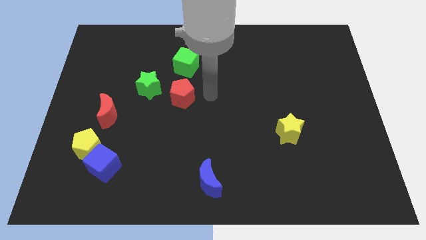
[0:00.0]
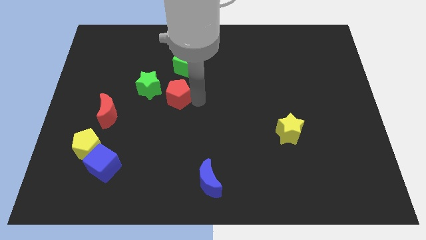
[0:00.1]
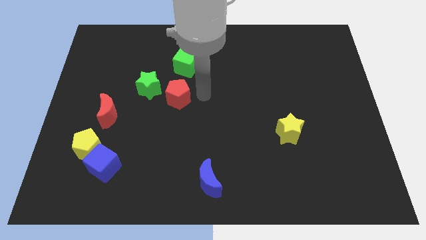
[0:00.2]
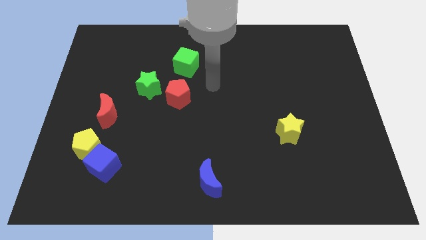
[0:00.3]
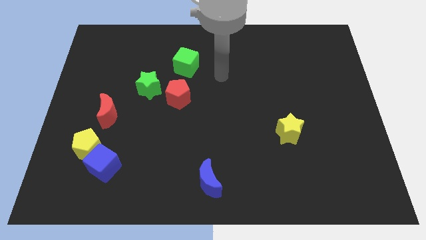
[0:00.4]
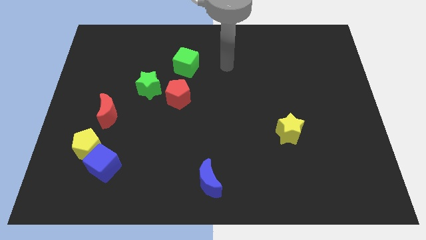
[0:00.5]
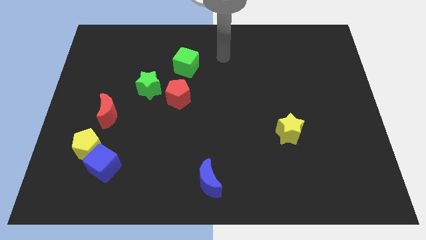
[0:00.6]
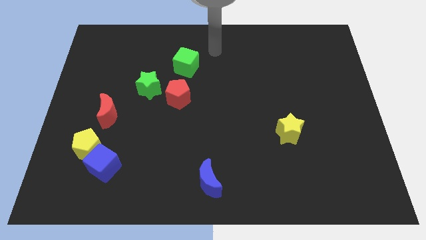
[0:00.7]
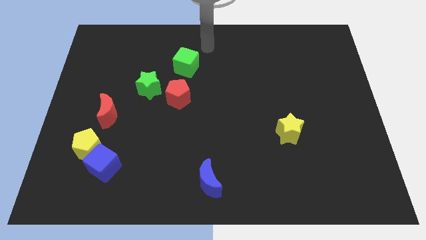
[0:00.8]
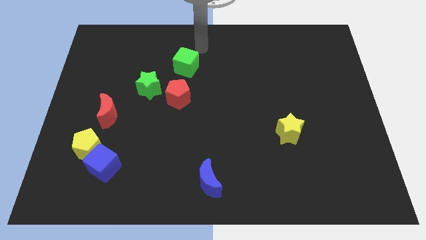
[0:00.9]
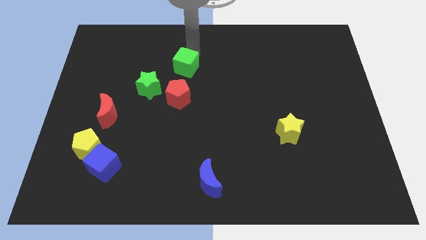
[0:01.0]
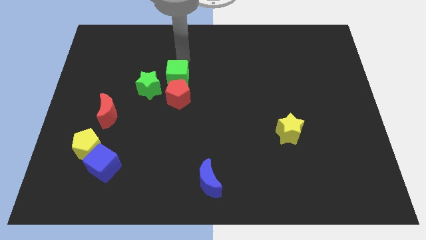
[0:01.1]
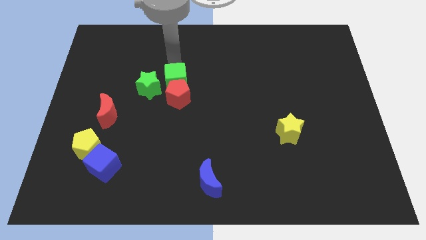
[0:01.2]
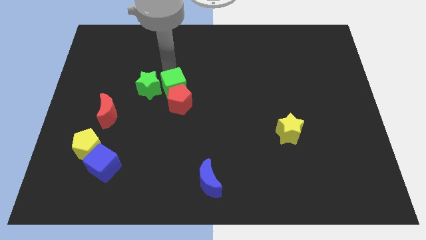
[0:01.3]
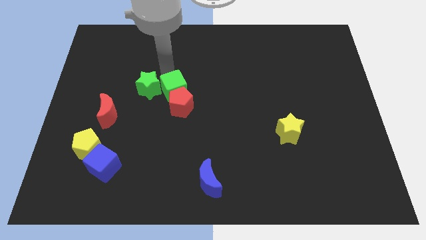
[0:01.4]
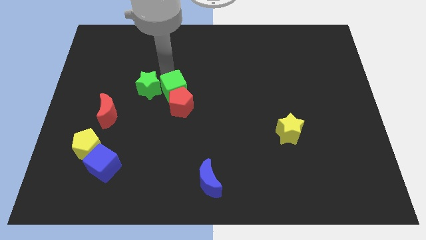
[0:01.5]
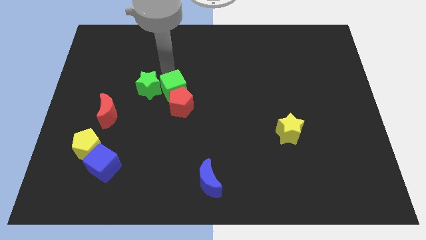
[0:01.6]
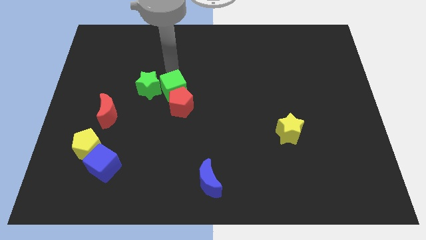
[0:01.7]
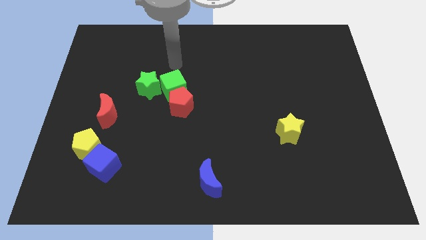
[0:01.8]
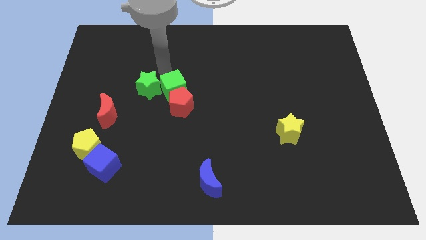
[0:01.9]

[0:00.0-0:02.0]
push the green cube into red pentagon

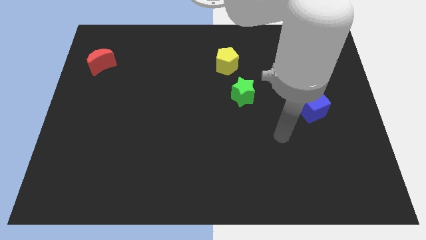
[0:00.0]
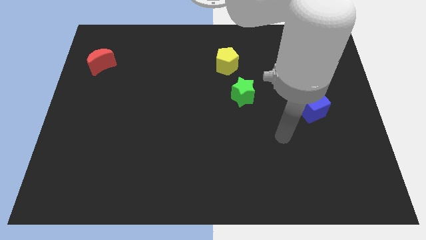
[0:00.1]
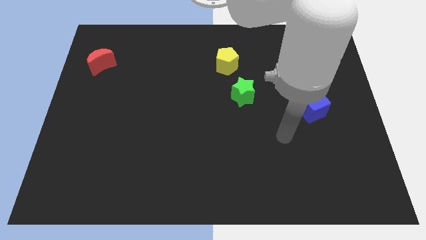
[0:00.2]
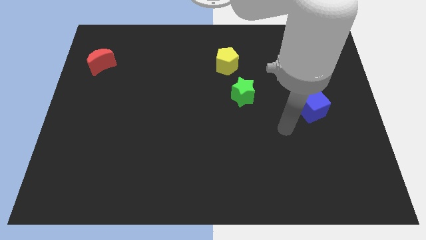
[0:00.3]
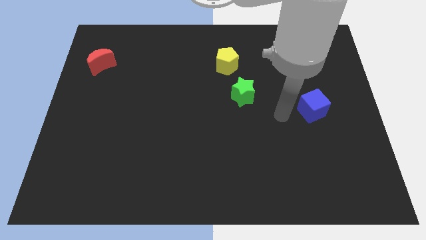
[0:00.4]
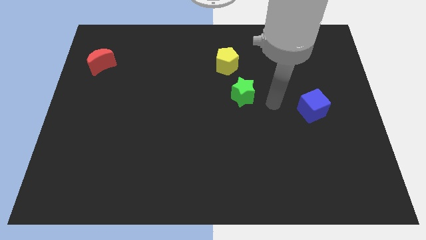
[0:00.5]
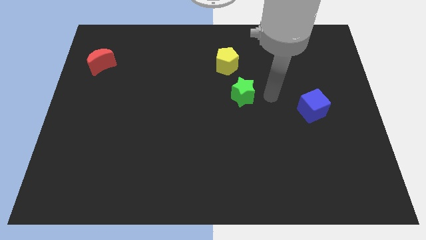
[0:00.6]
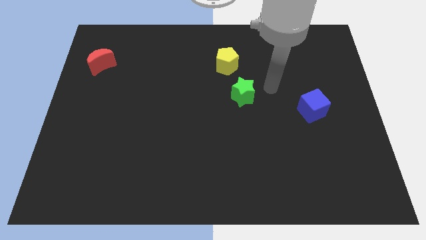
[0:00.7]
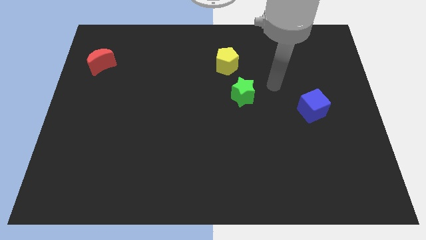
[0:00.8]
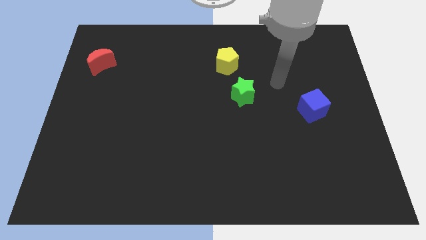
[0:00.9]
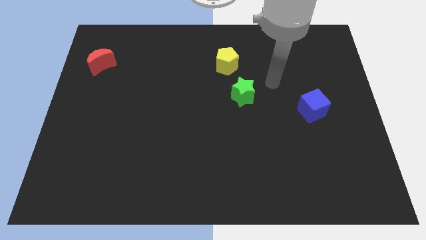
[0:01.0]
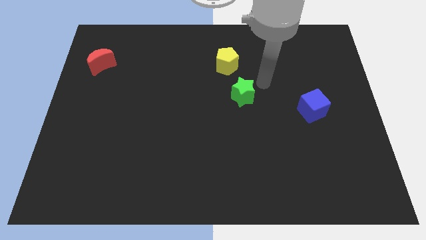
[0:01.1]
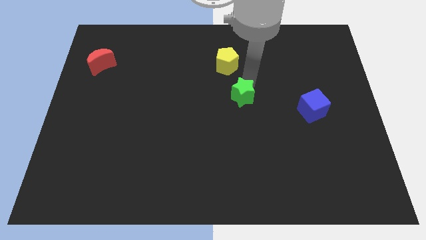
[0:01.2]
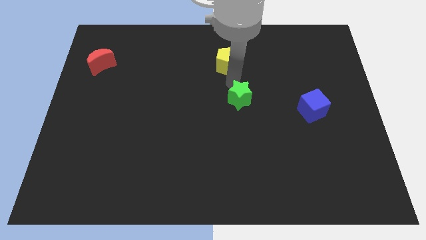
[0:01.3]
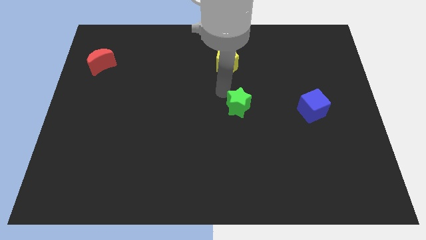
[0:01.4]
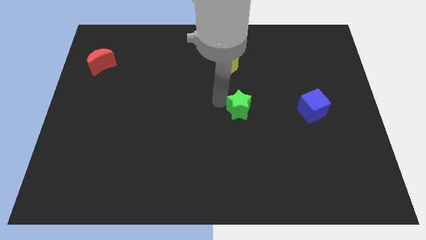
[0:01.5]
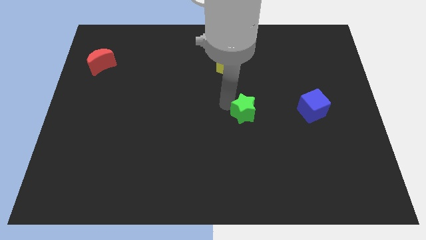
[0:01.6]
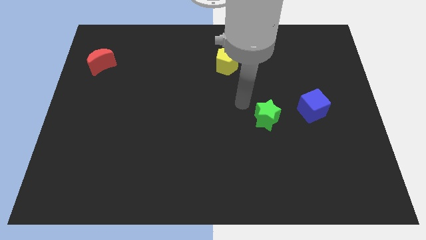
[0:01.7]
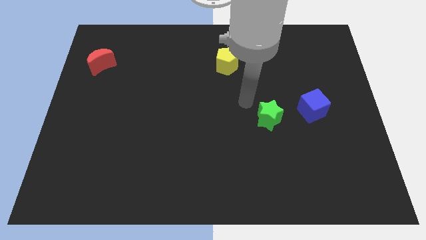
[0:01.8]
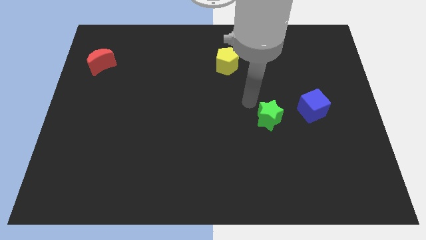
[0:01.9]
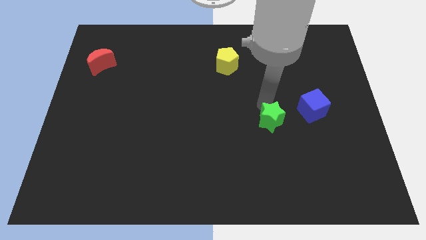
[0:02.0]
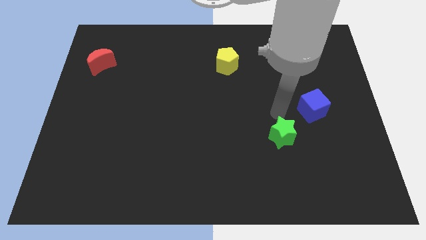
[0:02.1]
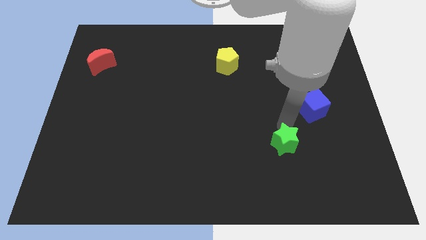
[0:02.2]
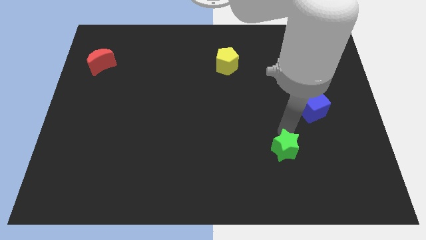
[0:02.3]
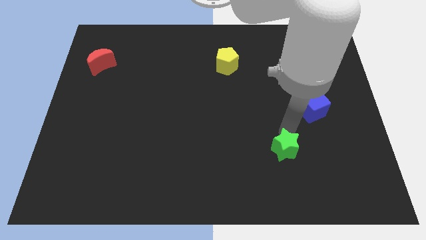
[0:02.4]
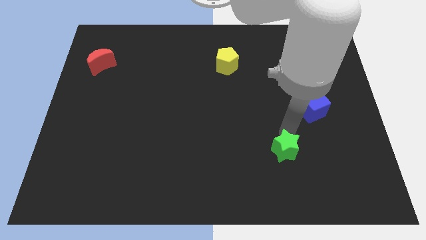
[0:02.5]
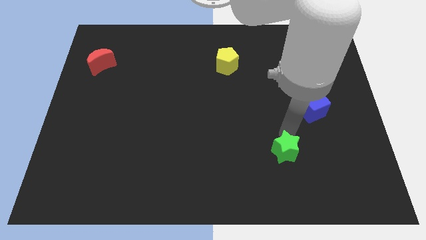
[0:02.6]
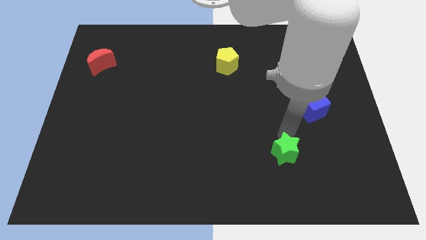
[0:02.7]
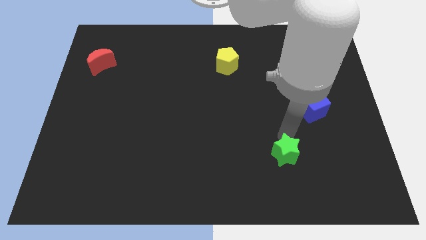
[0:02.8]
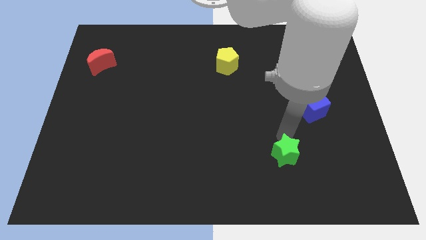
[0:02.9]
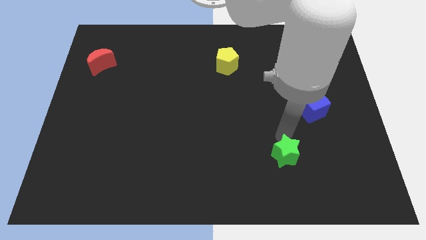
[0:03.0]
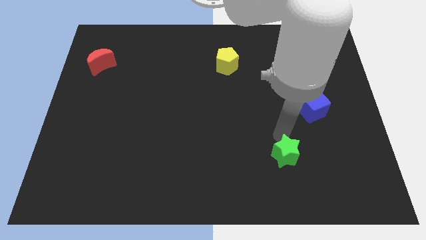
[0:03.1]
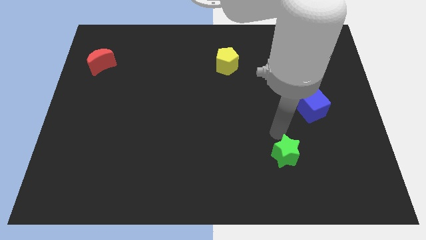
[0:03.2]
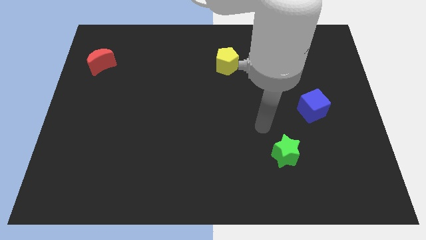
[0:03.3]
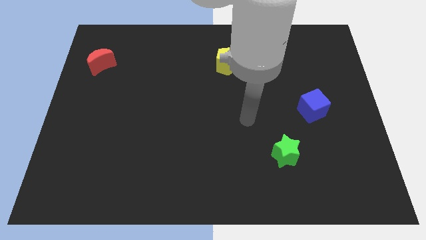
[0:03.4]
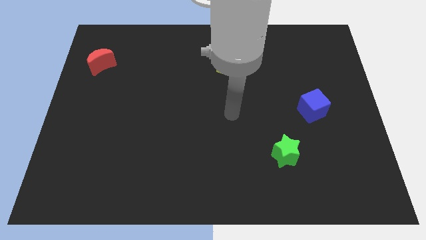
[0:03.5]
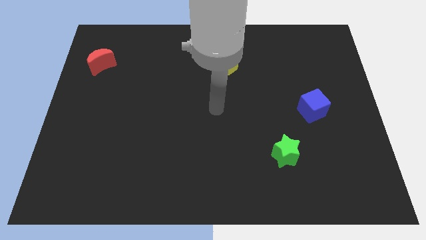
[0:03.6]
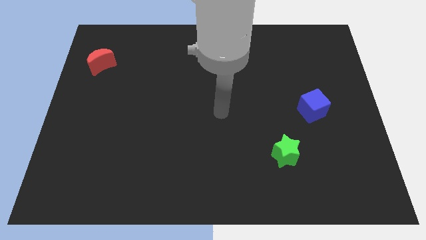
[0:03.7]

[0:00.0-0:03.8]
move green star to the bottom left of blue cube

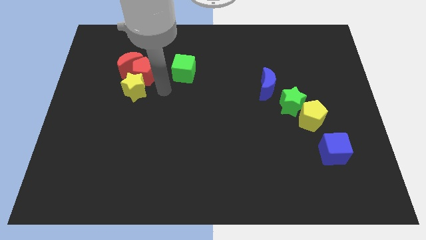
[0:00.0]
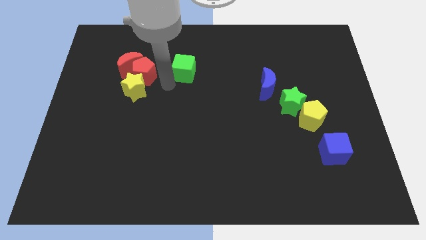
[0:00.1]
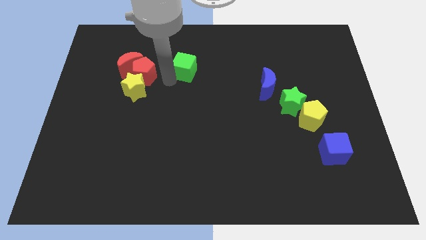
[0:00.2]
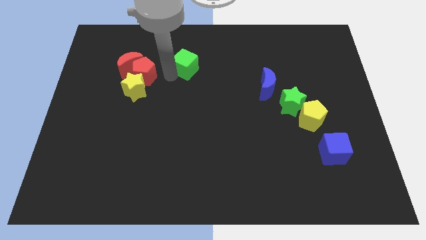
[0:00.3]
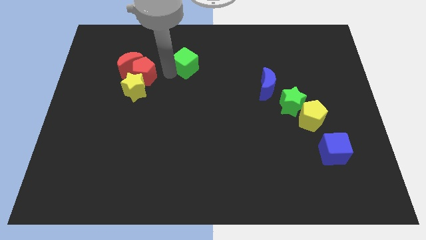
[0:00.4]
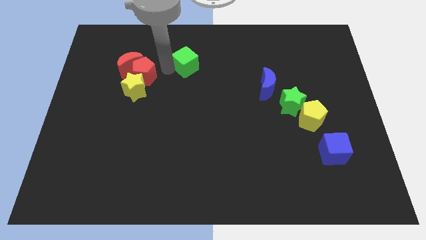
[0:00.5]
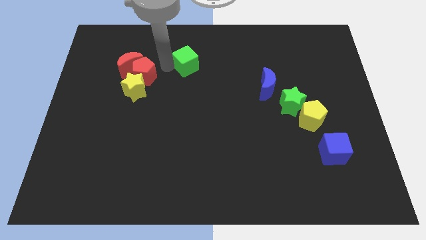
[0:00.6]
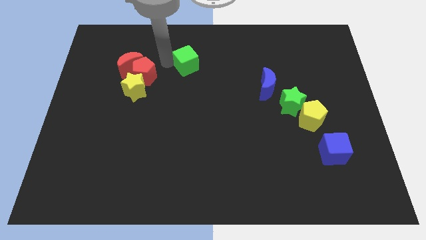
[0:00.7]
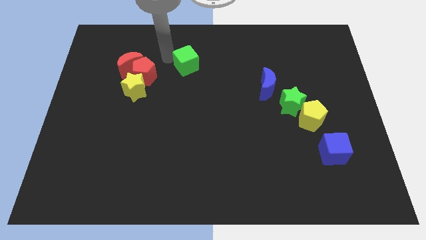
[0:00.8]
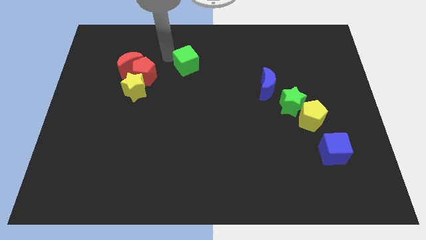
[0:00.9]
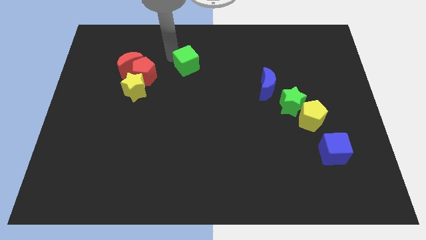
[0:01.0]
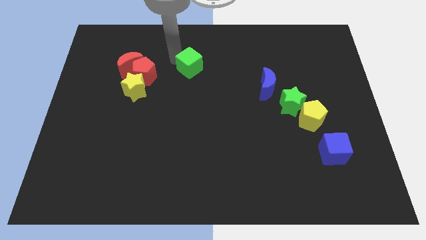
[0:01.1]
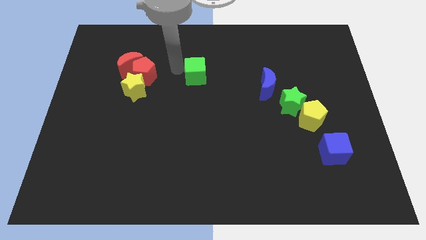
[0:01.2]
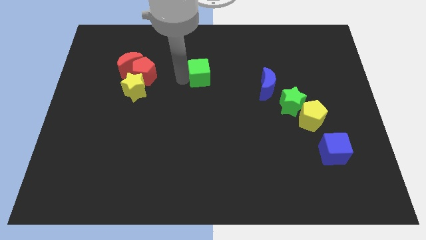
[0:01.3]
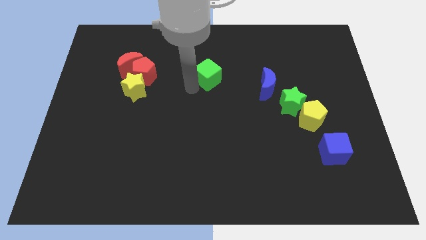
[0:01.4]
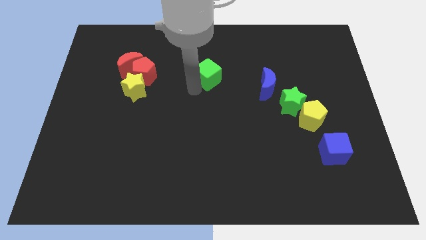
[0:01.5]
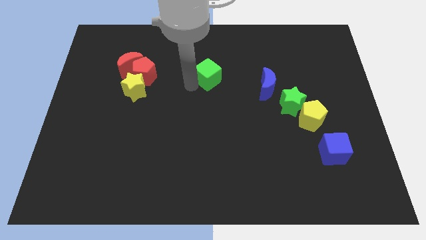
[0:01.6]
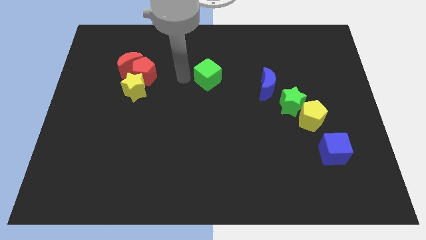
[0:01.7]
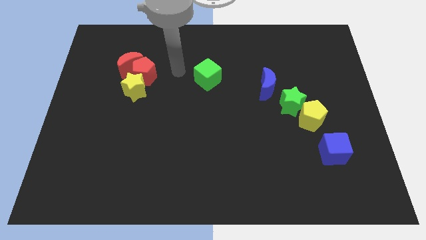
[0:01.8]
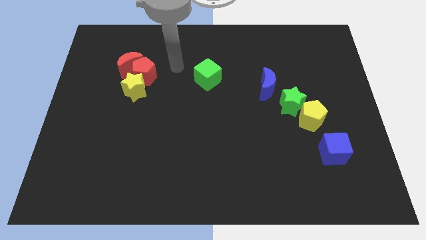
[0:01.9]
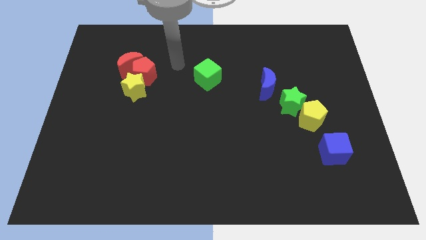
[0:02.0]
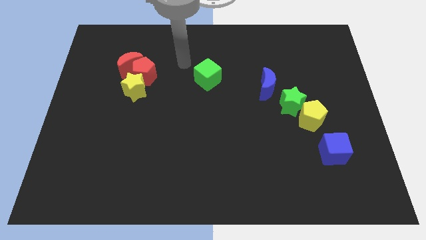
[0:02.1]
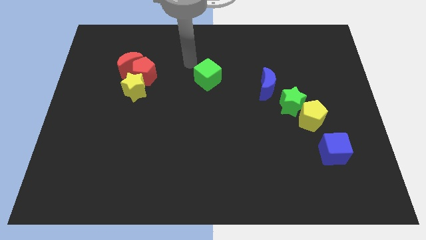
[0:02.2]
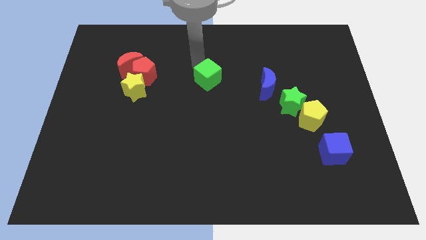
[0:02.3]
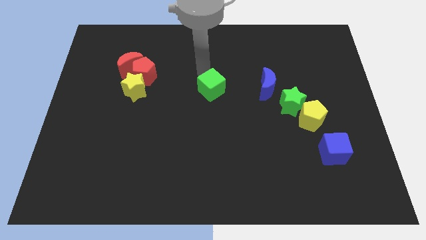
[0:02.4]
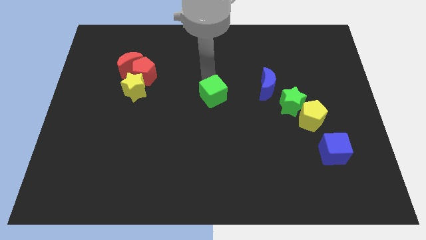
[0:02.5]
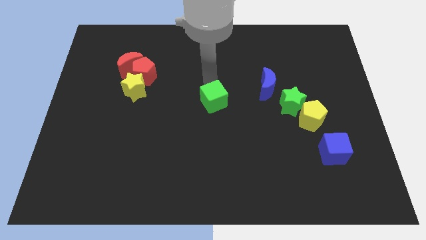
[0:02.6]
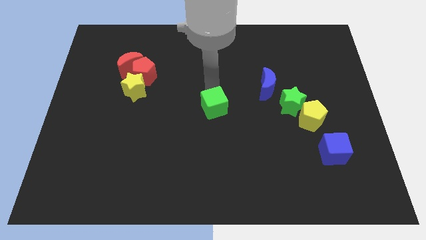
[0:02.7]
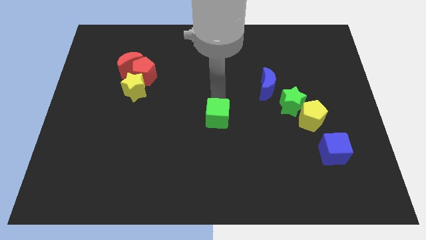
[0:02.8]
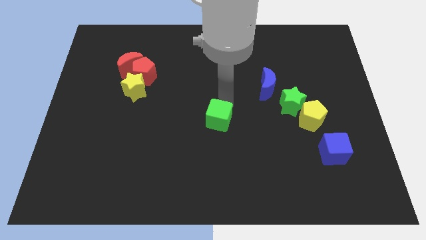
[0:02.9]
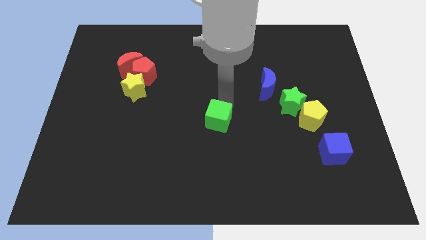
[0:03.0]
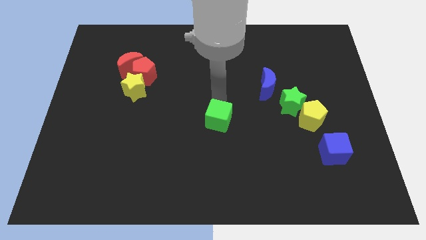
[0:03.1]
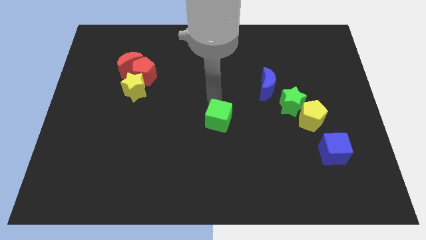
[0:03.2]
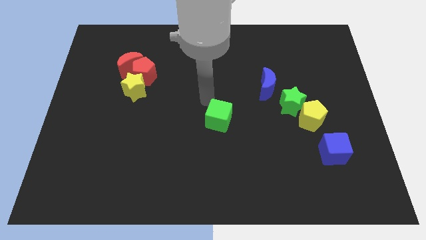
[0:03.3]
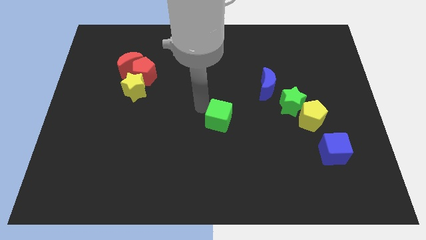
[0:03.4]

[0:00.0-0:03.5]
move the green cube diagonal to the group of red blocks
